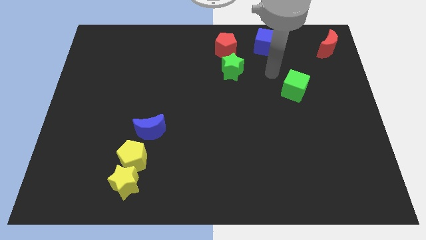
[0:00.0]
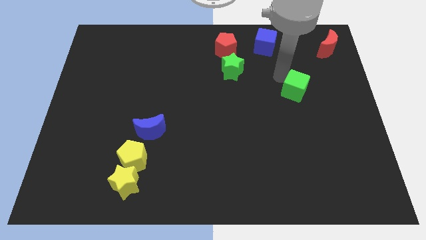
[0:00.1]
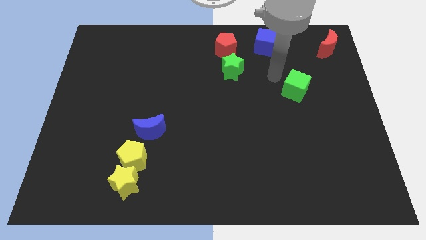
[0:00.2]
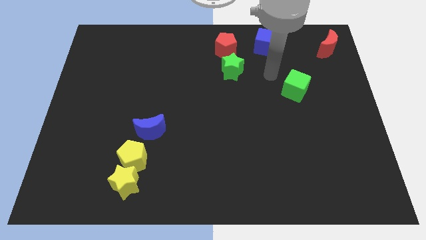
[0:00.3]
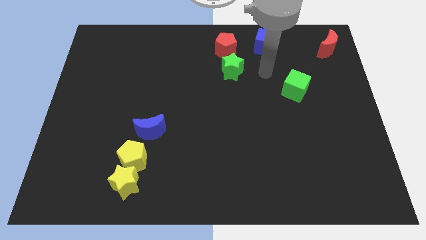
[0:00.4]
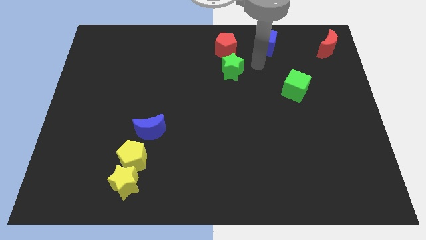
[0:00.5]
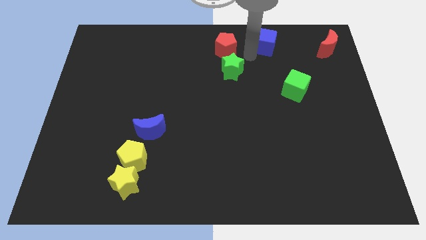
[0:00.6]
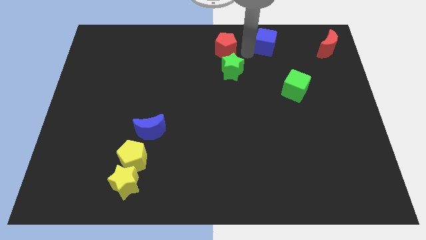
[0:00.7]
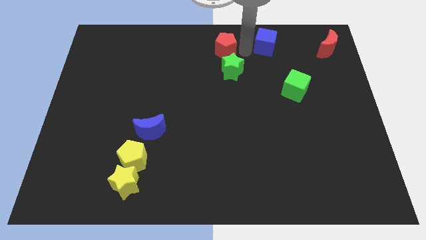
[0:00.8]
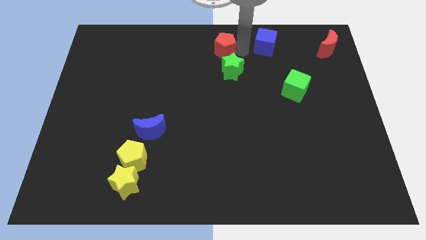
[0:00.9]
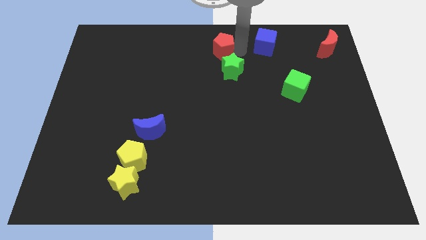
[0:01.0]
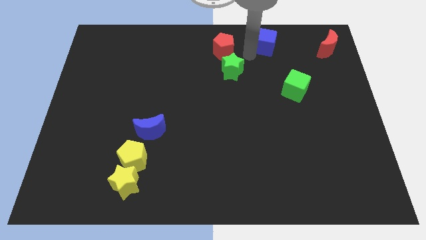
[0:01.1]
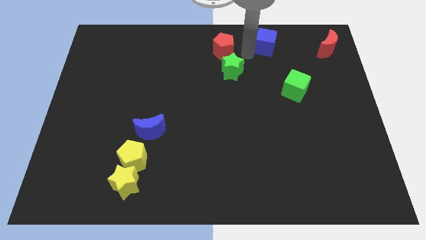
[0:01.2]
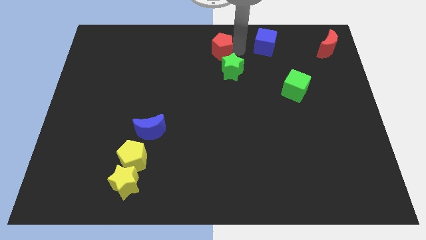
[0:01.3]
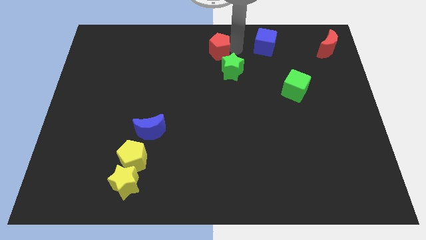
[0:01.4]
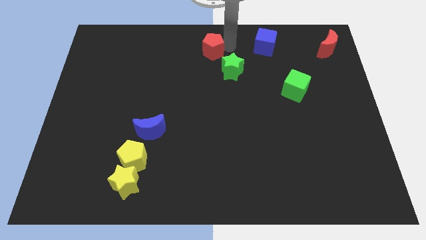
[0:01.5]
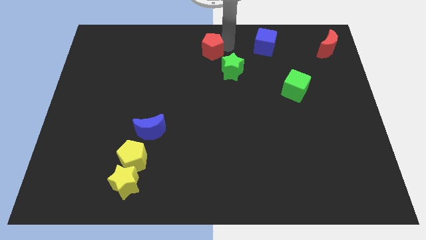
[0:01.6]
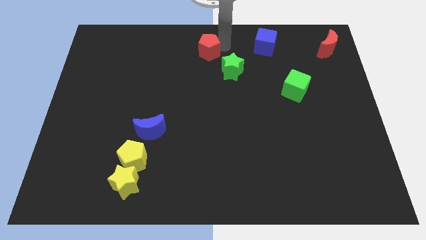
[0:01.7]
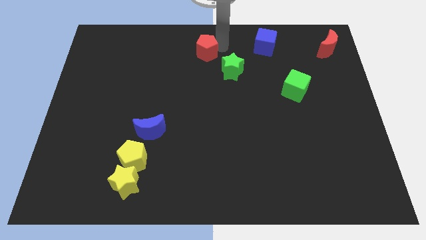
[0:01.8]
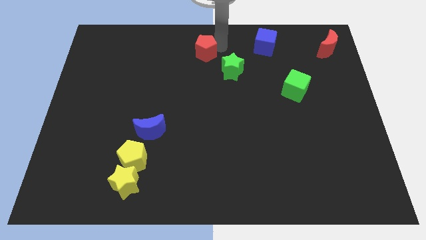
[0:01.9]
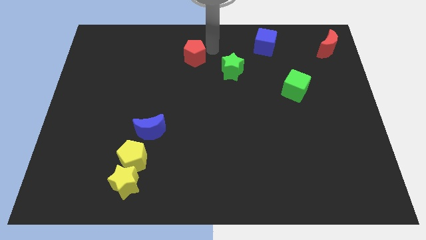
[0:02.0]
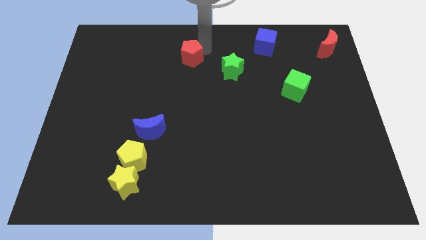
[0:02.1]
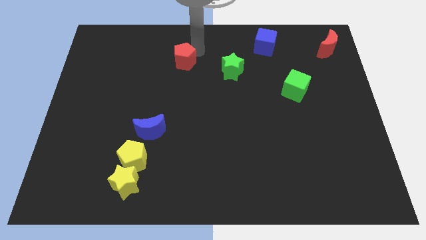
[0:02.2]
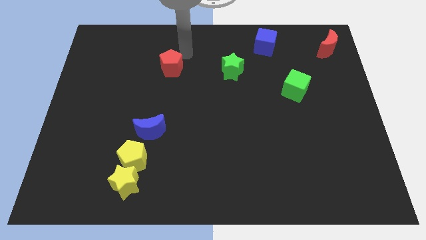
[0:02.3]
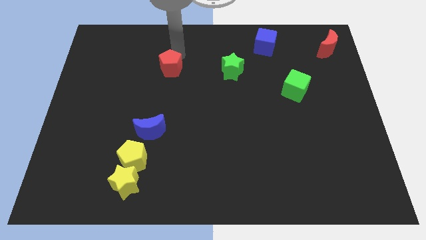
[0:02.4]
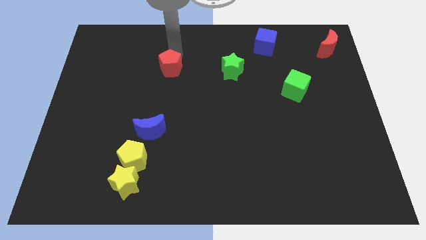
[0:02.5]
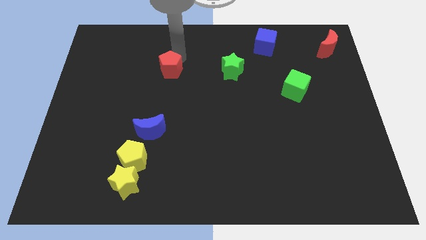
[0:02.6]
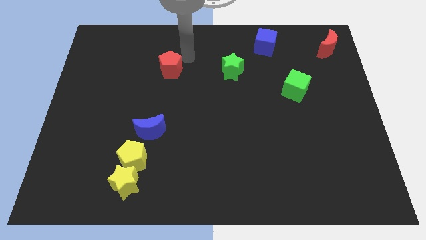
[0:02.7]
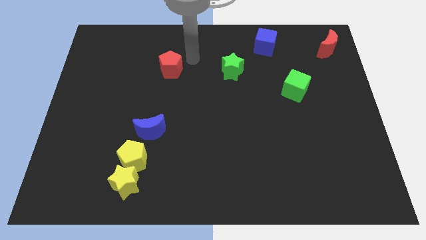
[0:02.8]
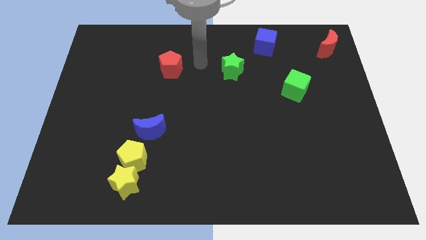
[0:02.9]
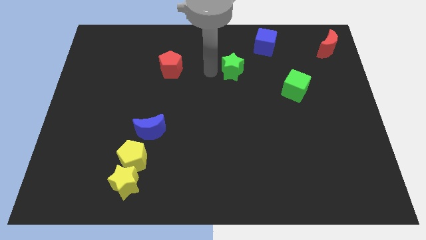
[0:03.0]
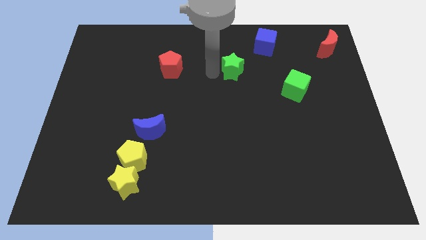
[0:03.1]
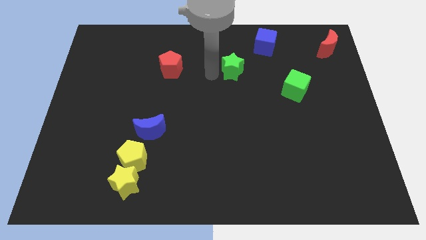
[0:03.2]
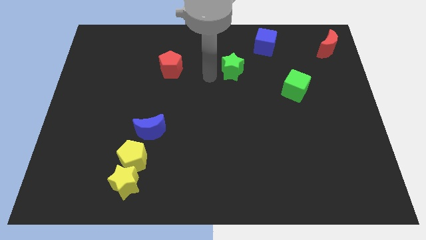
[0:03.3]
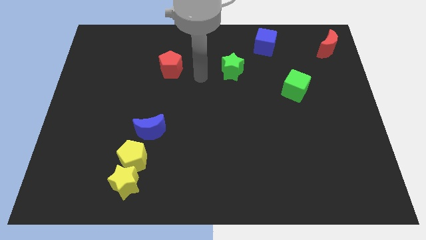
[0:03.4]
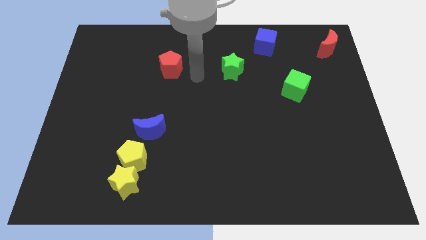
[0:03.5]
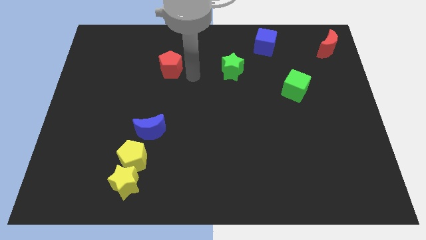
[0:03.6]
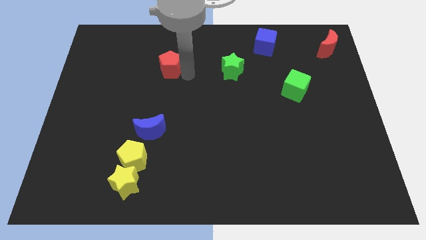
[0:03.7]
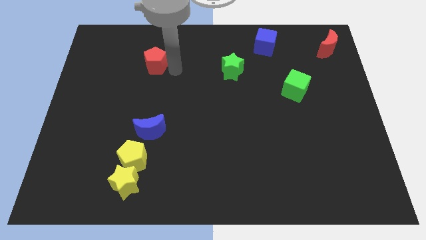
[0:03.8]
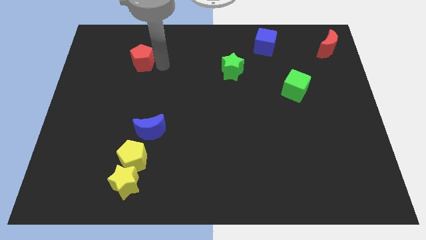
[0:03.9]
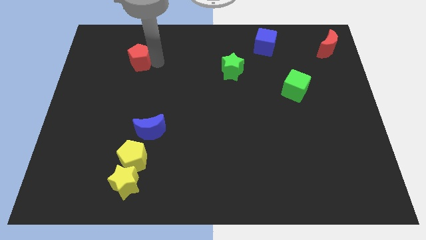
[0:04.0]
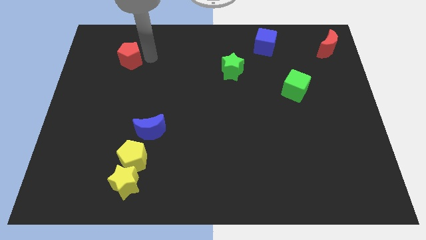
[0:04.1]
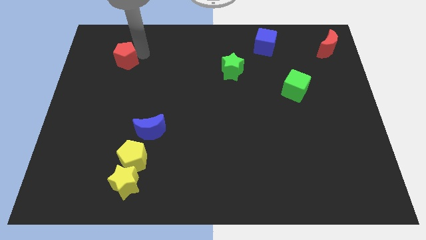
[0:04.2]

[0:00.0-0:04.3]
separate red pentagon from the green star

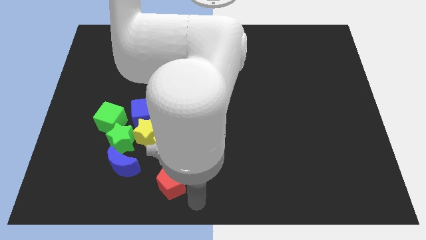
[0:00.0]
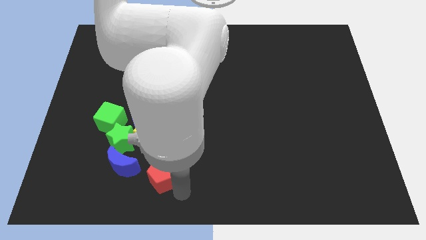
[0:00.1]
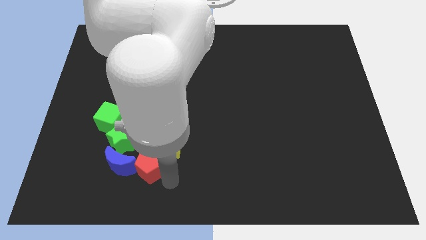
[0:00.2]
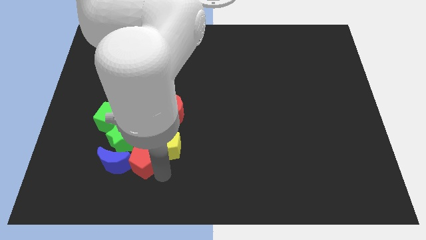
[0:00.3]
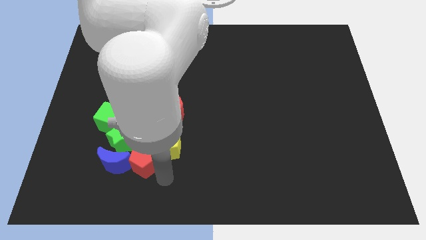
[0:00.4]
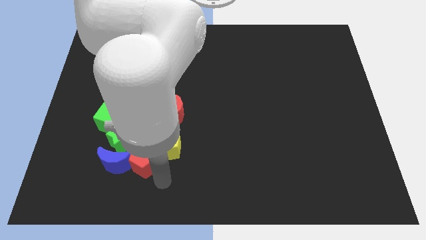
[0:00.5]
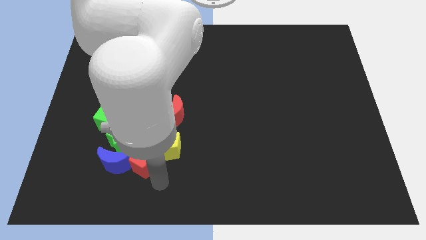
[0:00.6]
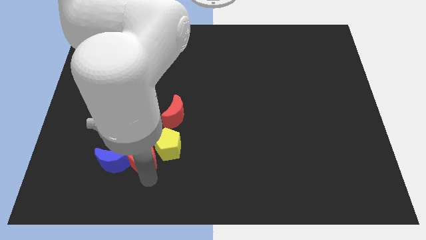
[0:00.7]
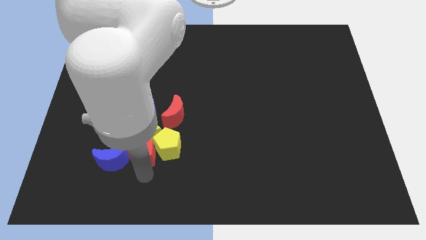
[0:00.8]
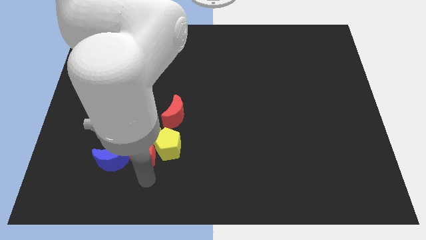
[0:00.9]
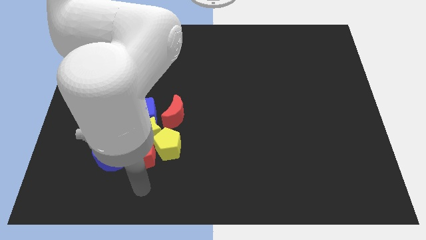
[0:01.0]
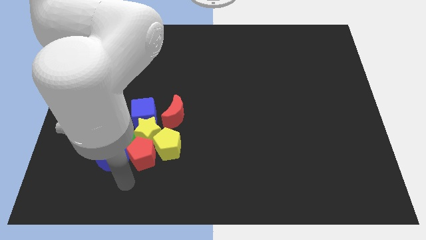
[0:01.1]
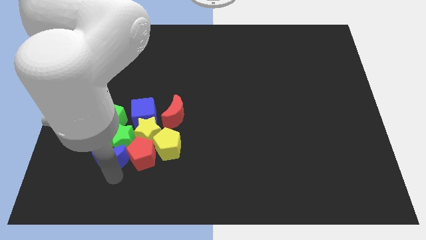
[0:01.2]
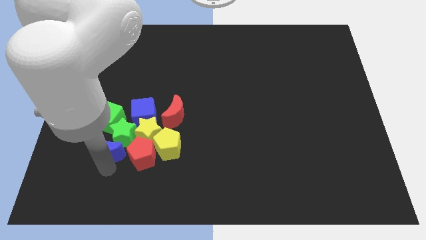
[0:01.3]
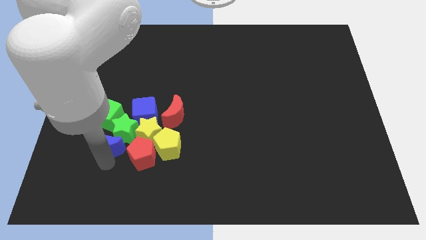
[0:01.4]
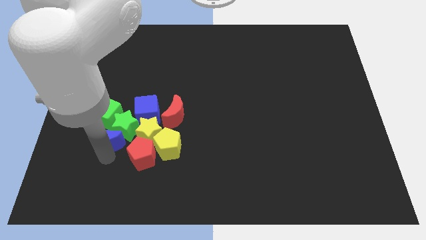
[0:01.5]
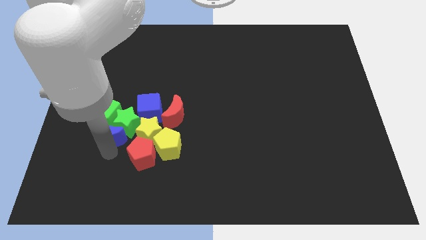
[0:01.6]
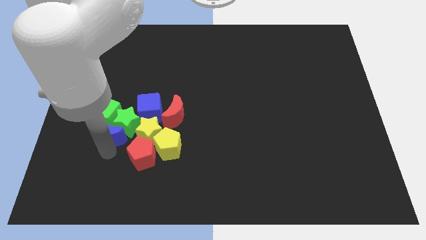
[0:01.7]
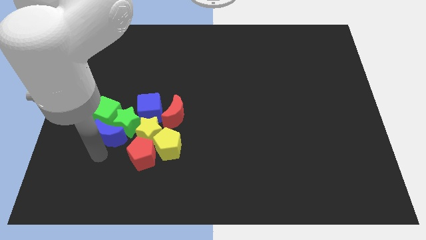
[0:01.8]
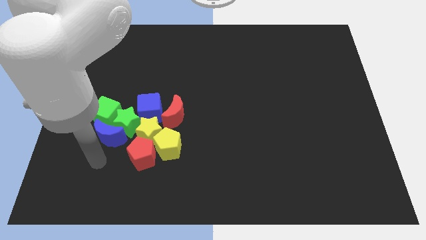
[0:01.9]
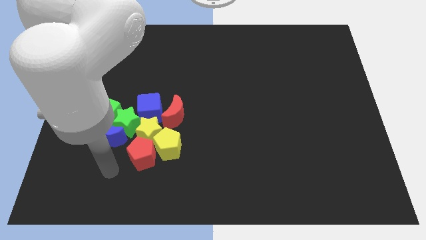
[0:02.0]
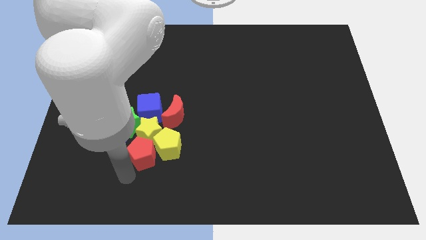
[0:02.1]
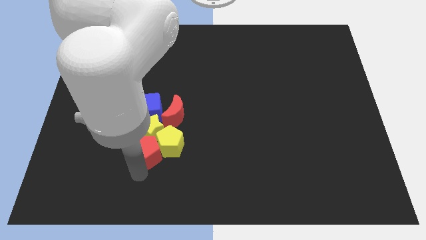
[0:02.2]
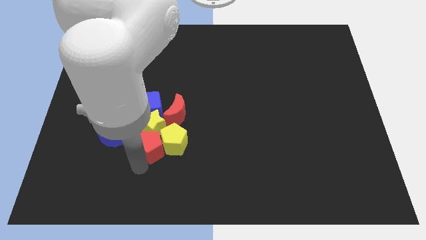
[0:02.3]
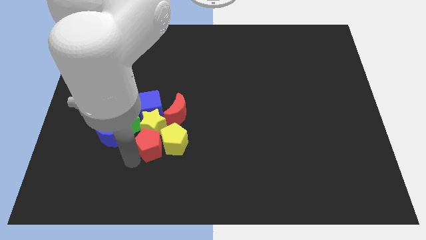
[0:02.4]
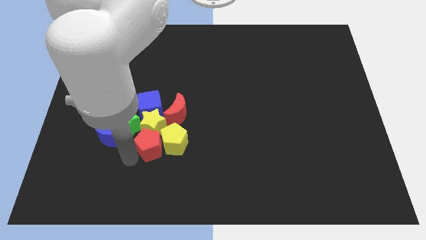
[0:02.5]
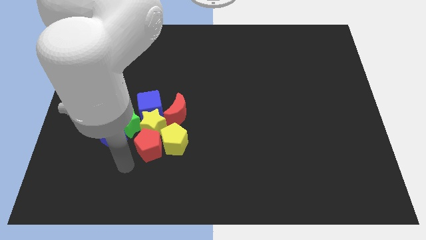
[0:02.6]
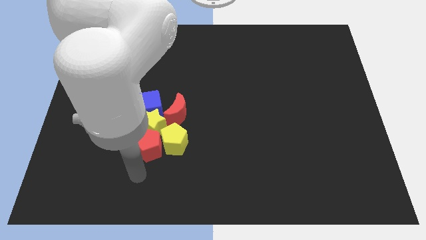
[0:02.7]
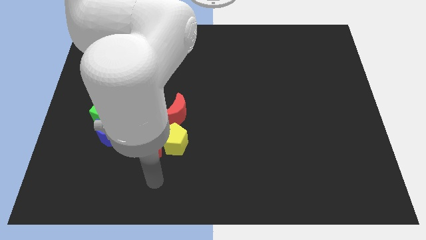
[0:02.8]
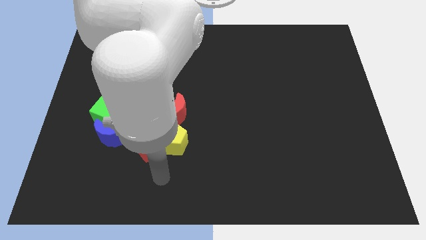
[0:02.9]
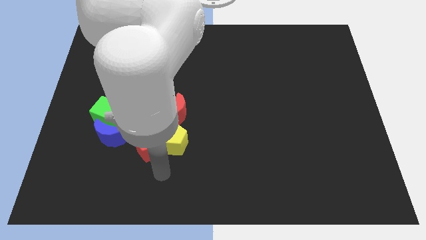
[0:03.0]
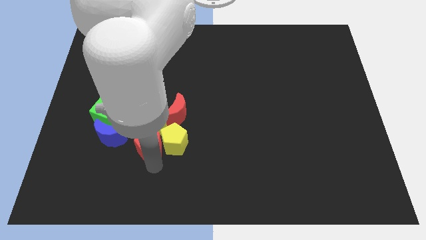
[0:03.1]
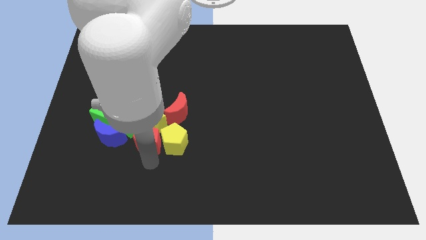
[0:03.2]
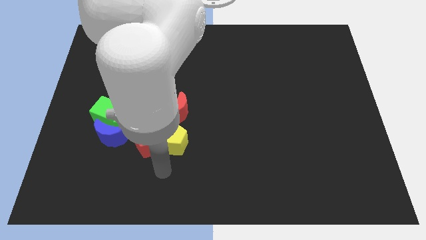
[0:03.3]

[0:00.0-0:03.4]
slightly push the group of blocks towards the top side of the board

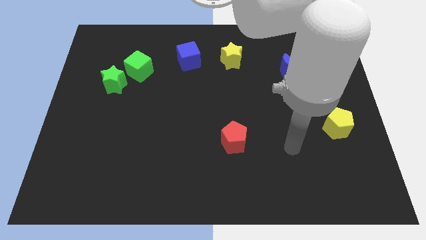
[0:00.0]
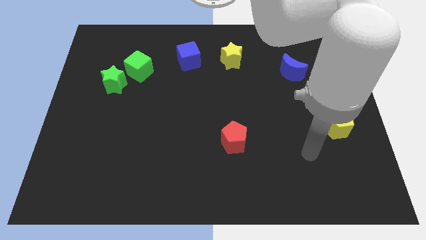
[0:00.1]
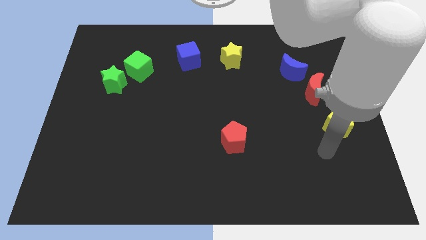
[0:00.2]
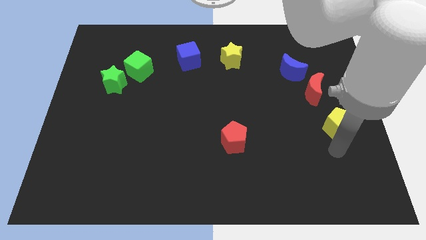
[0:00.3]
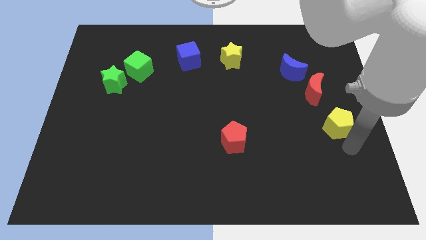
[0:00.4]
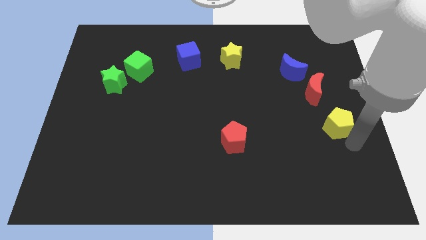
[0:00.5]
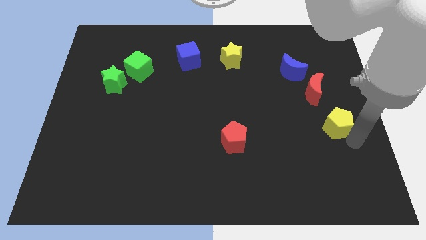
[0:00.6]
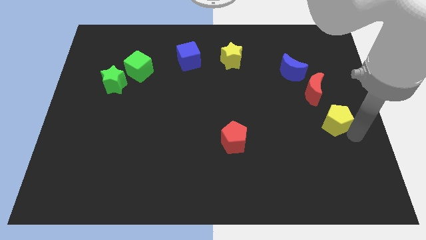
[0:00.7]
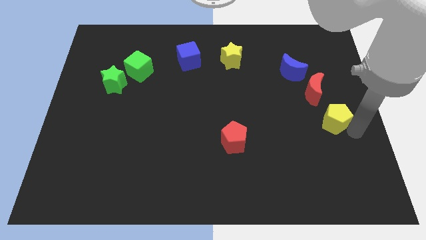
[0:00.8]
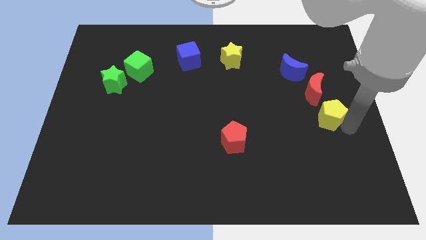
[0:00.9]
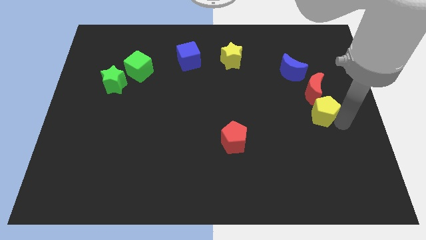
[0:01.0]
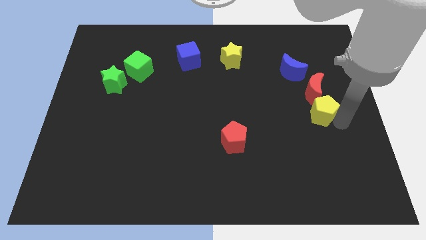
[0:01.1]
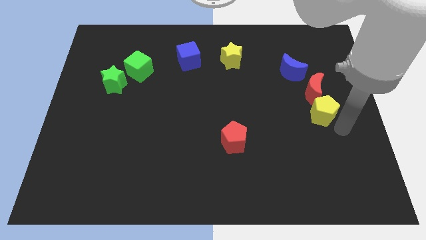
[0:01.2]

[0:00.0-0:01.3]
move the yellow pentagon towards the bottom side of the red crescent
